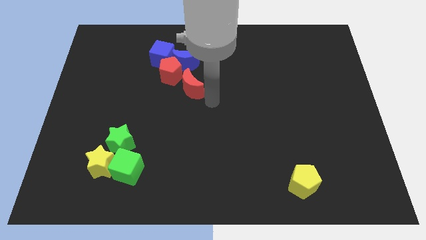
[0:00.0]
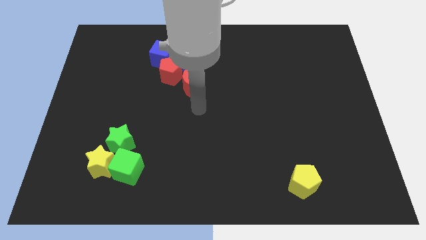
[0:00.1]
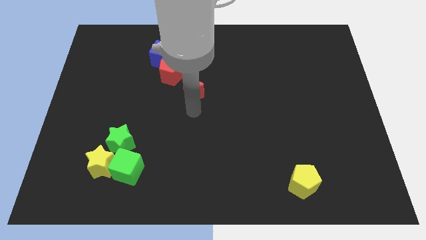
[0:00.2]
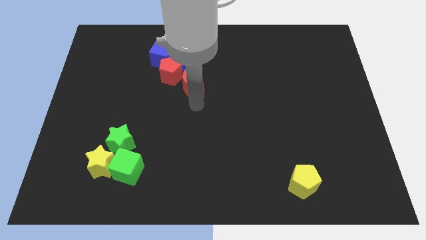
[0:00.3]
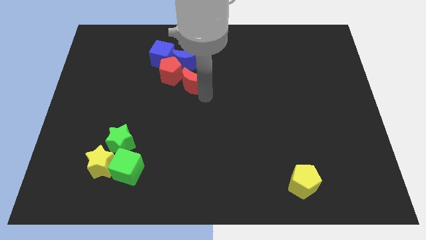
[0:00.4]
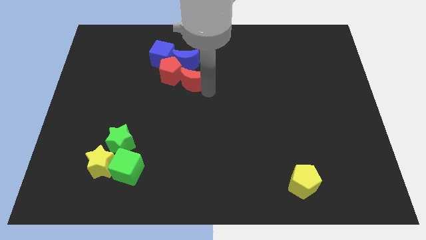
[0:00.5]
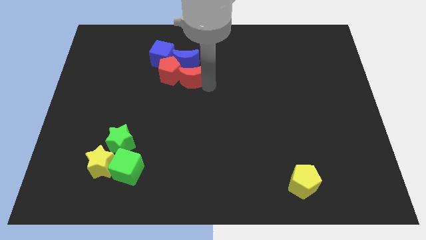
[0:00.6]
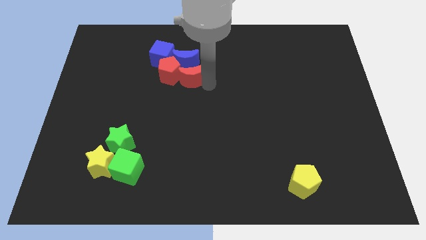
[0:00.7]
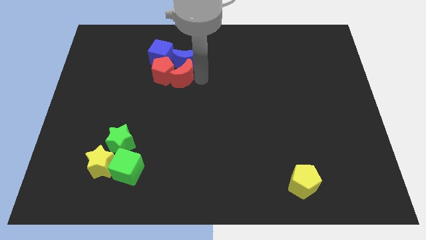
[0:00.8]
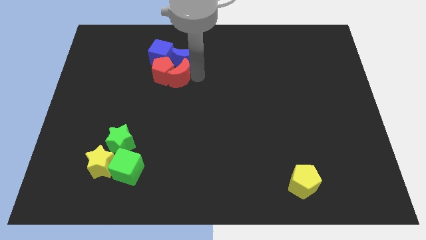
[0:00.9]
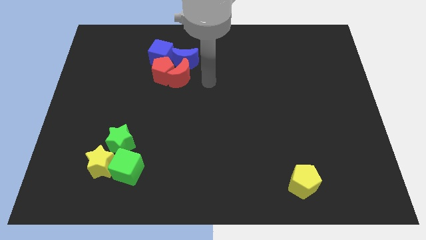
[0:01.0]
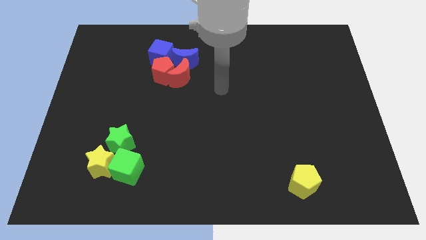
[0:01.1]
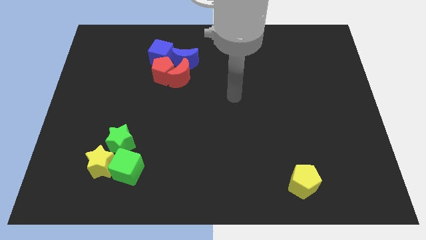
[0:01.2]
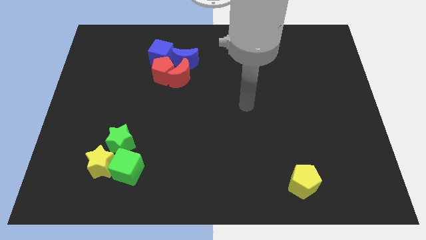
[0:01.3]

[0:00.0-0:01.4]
push the red half moon into the red pentagon

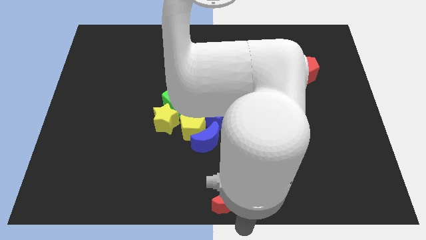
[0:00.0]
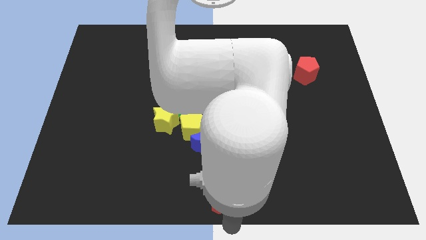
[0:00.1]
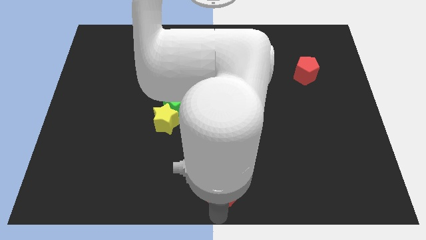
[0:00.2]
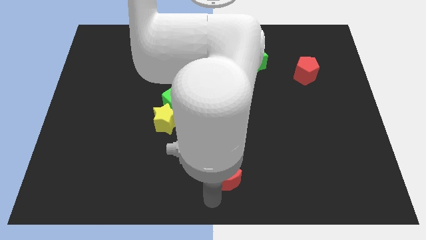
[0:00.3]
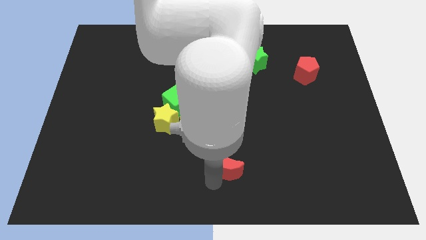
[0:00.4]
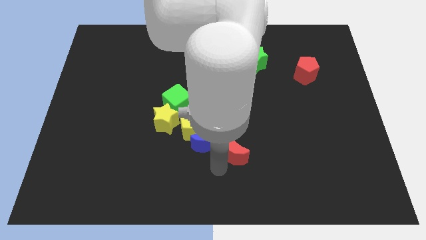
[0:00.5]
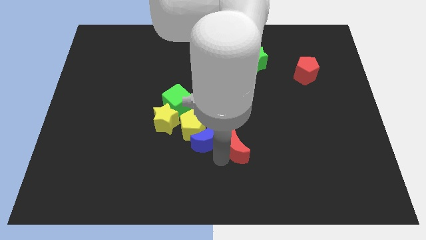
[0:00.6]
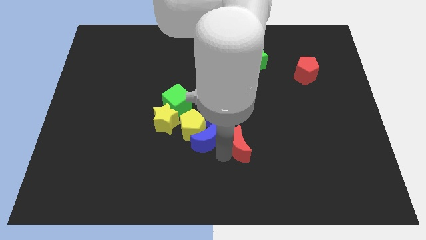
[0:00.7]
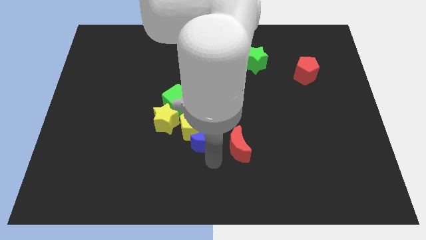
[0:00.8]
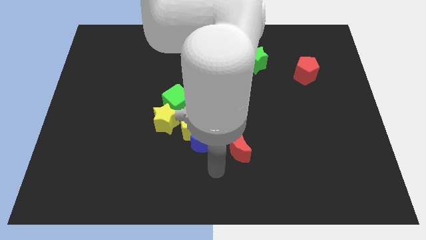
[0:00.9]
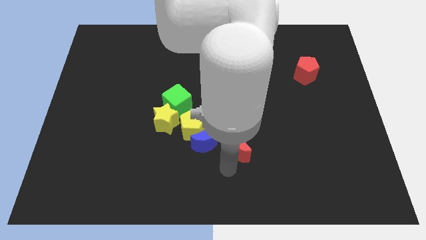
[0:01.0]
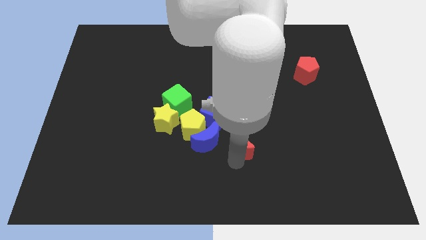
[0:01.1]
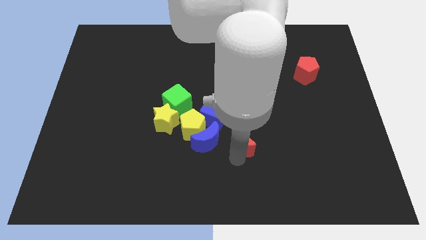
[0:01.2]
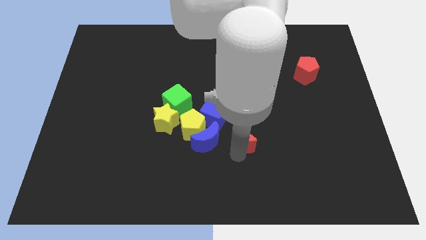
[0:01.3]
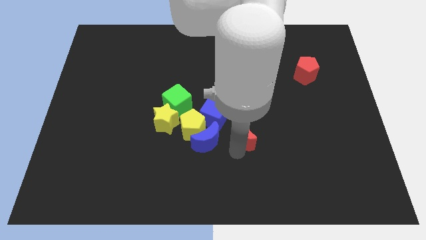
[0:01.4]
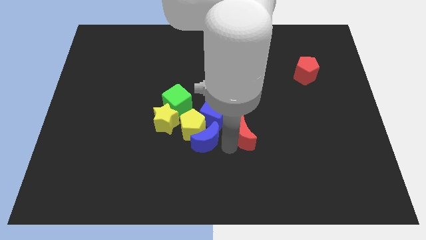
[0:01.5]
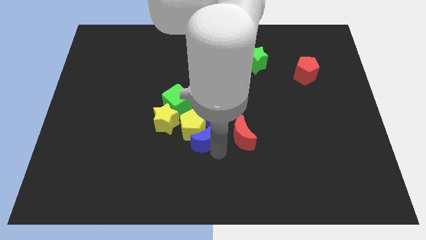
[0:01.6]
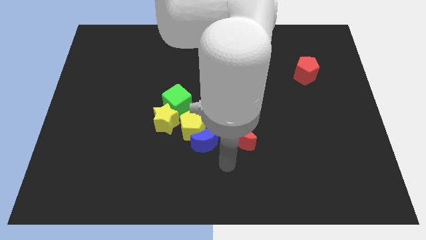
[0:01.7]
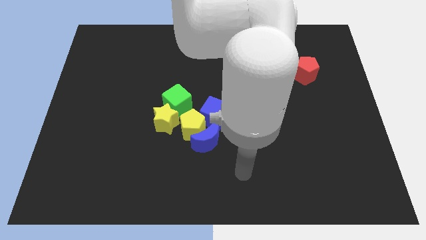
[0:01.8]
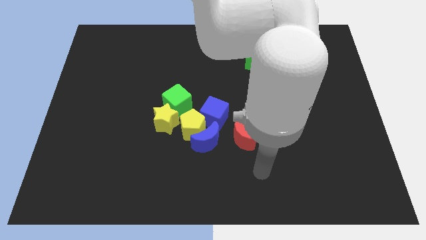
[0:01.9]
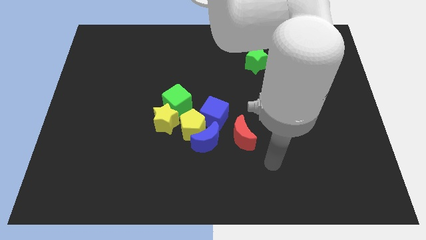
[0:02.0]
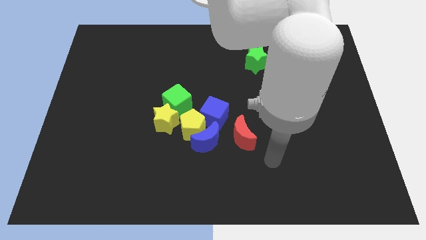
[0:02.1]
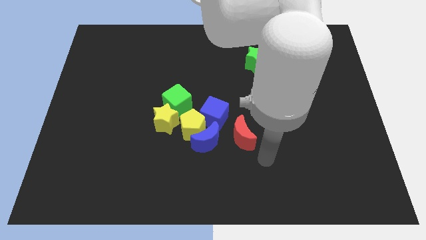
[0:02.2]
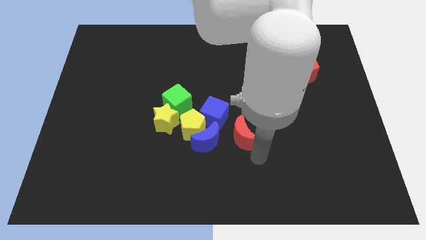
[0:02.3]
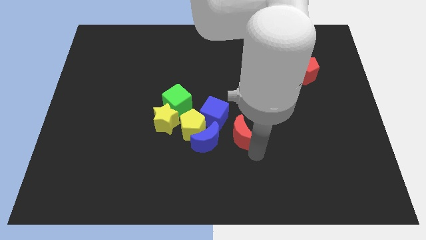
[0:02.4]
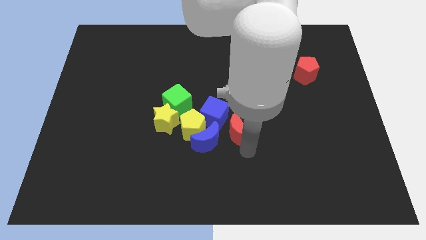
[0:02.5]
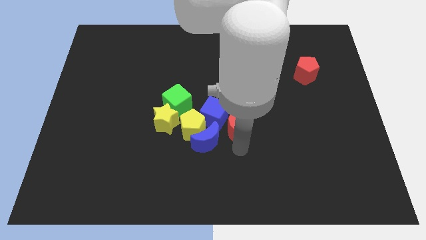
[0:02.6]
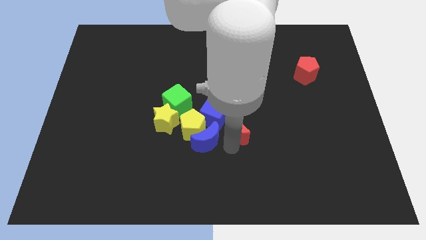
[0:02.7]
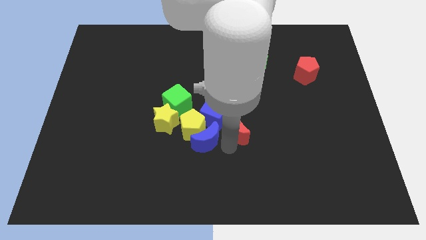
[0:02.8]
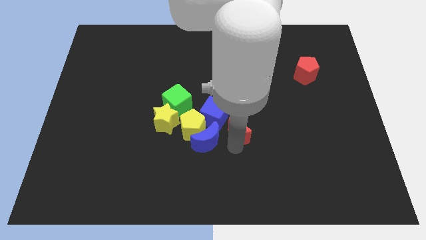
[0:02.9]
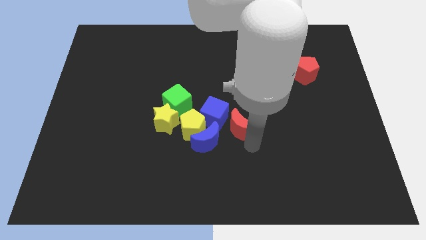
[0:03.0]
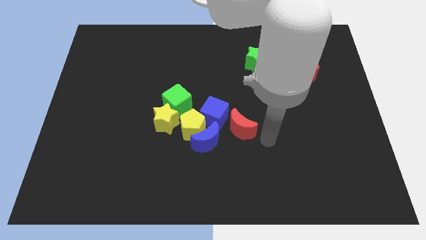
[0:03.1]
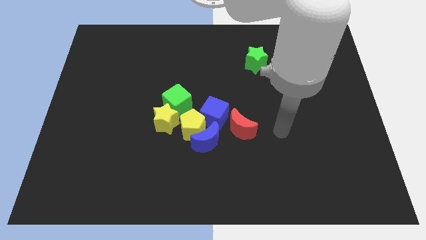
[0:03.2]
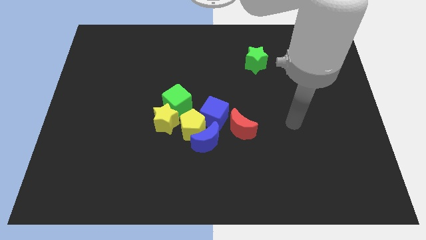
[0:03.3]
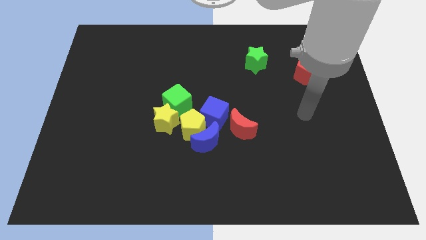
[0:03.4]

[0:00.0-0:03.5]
move the red moon right to the blue cube

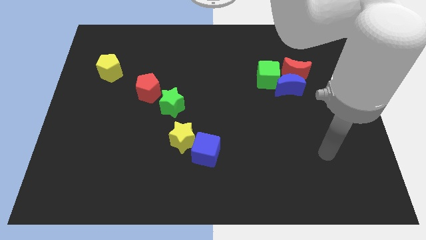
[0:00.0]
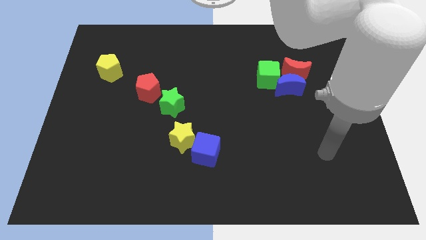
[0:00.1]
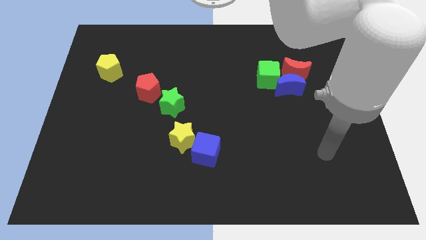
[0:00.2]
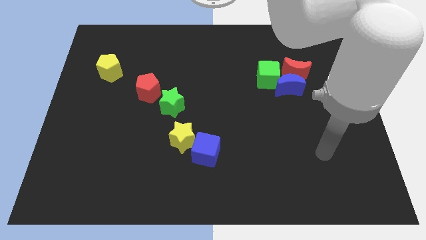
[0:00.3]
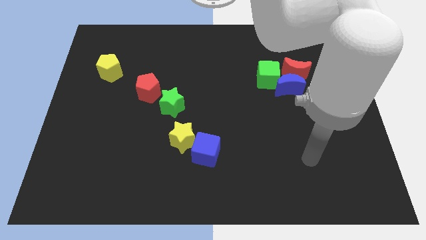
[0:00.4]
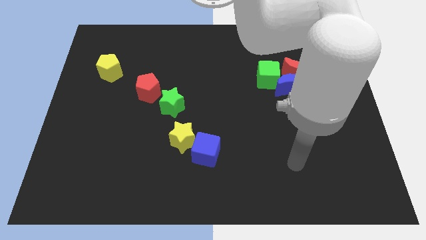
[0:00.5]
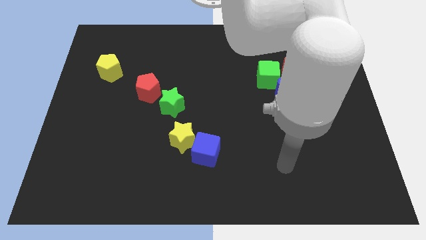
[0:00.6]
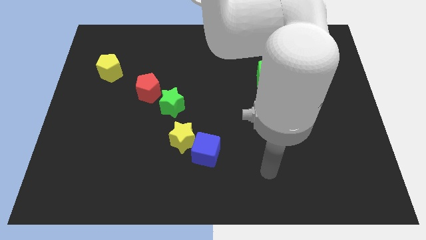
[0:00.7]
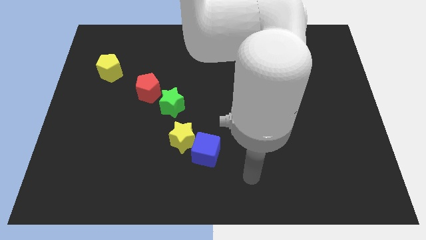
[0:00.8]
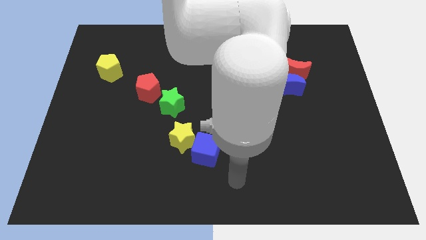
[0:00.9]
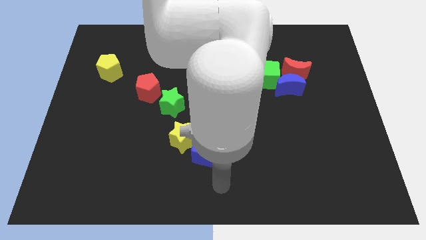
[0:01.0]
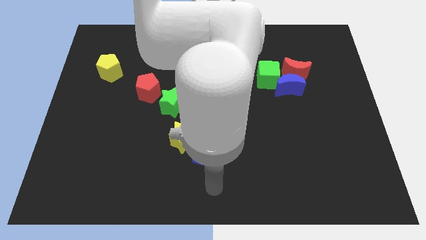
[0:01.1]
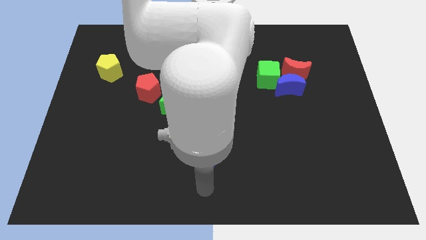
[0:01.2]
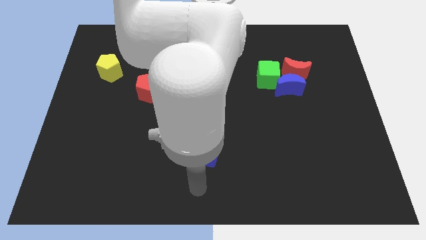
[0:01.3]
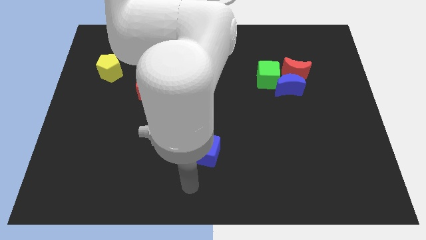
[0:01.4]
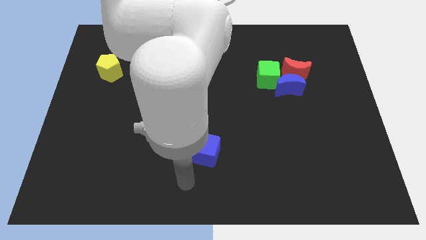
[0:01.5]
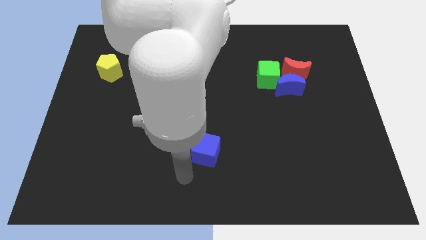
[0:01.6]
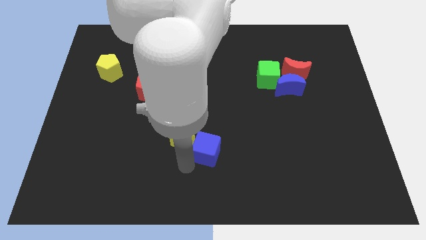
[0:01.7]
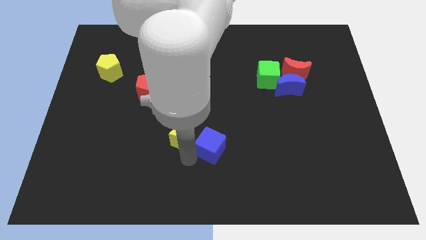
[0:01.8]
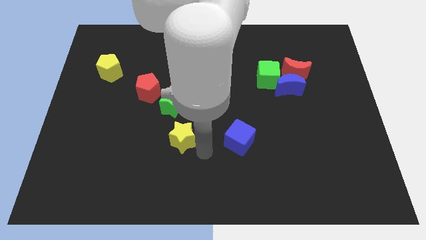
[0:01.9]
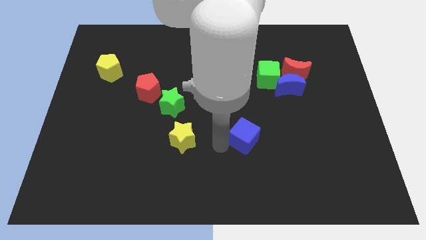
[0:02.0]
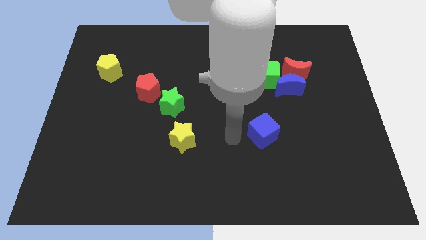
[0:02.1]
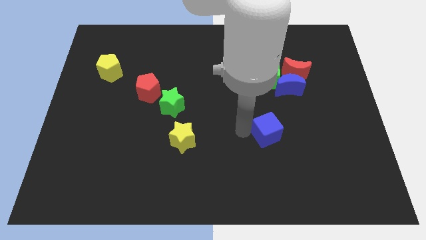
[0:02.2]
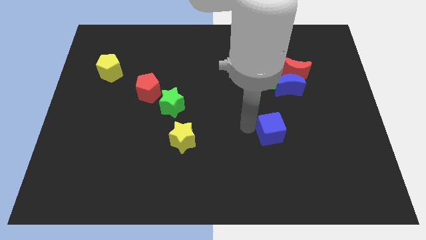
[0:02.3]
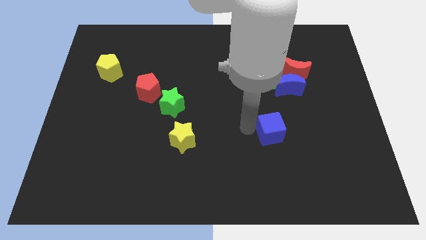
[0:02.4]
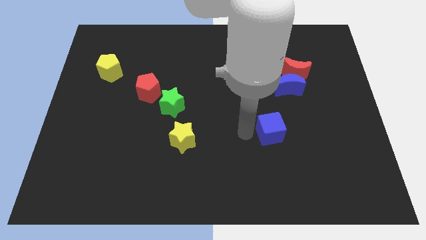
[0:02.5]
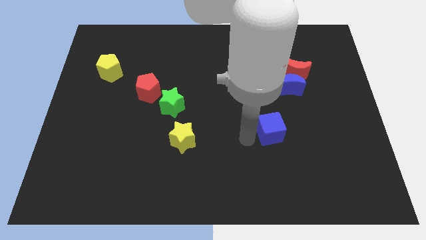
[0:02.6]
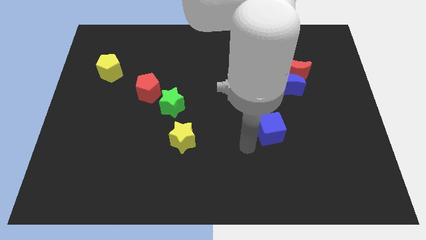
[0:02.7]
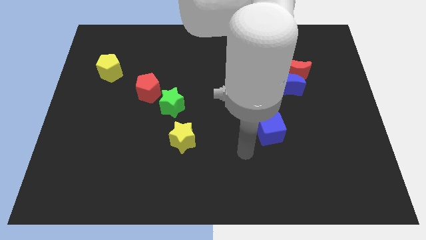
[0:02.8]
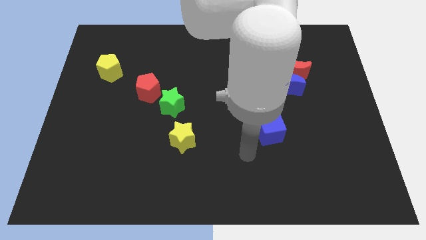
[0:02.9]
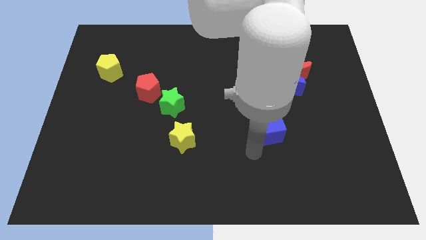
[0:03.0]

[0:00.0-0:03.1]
move the blue cube to the right of the yellow star

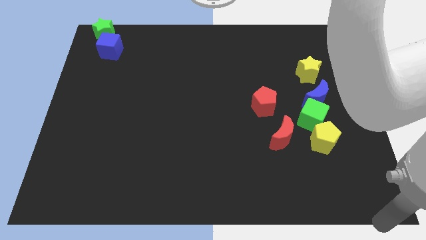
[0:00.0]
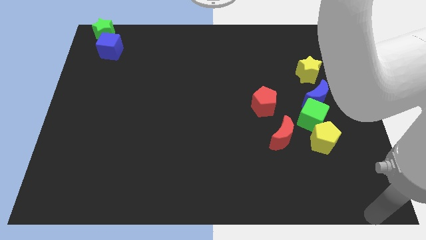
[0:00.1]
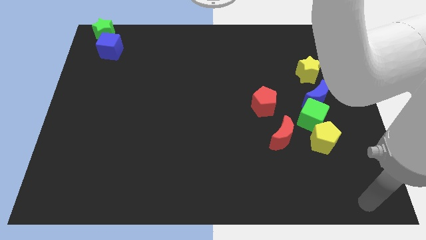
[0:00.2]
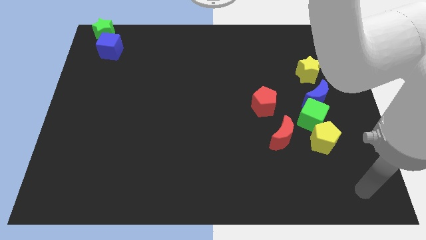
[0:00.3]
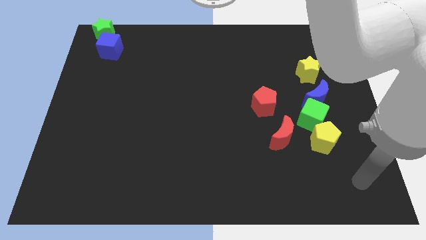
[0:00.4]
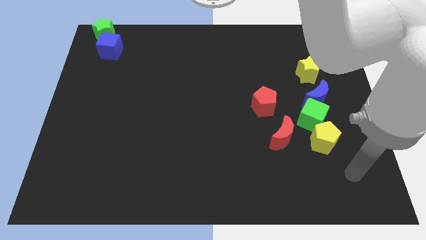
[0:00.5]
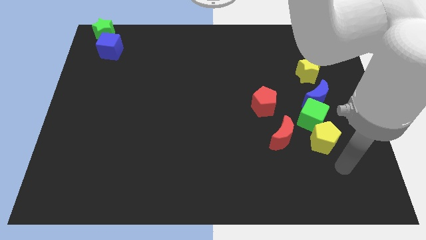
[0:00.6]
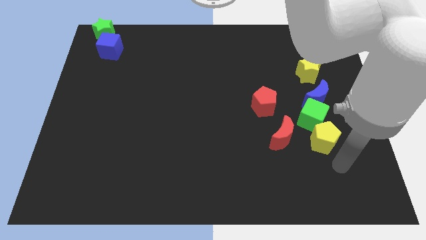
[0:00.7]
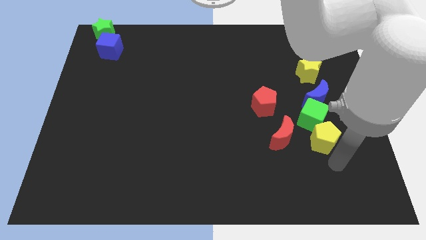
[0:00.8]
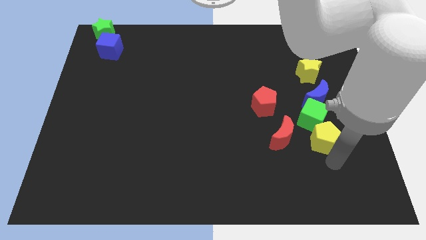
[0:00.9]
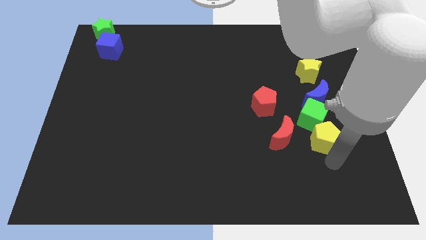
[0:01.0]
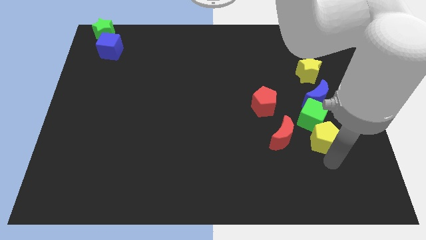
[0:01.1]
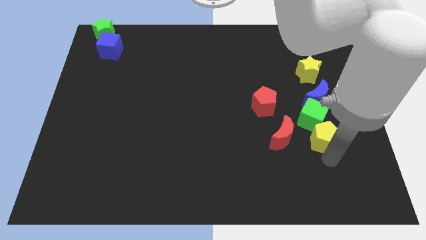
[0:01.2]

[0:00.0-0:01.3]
touch the bottom of yellow pentagon
